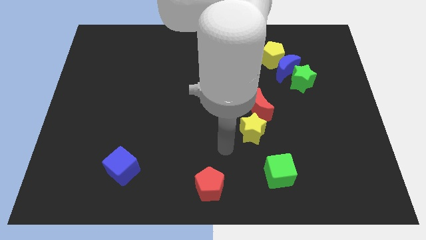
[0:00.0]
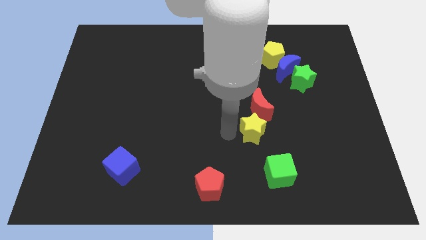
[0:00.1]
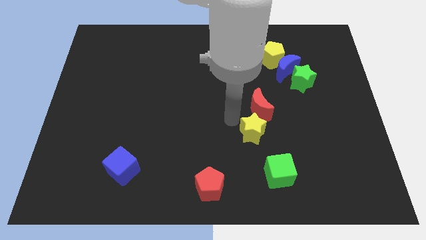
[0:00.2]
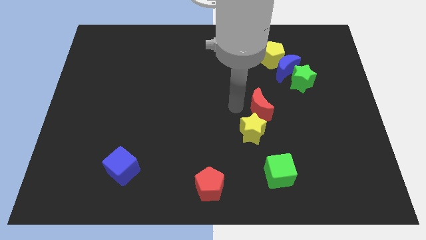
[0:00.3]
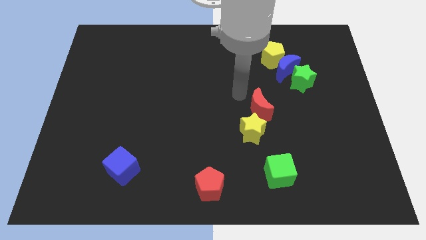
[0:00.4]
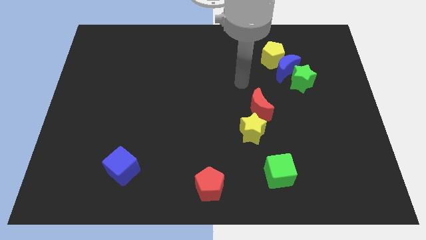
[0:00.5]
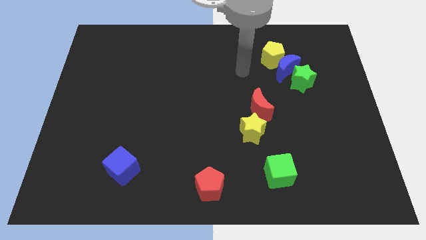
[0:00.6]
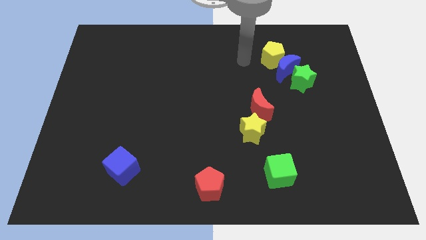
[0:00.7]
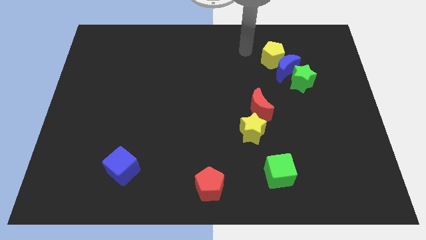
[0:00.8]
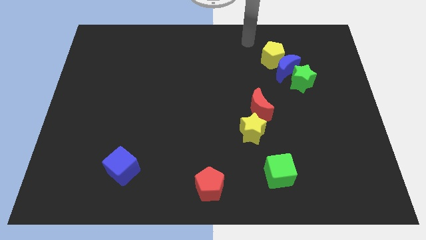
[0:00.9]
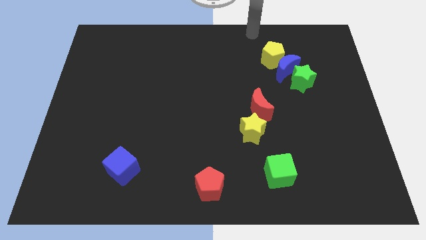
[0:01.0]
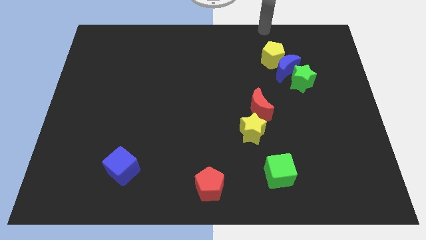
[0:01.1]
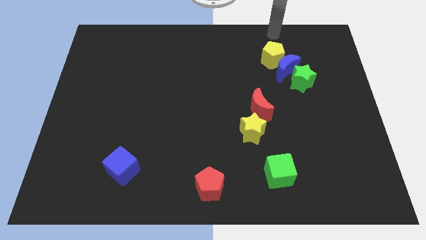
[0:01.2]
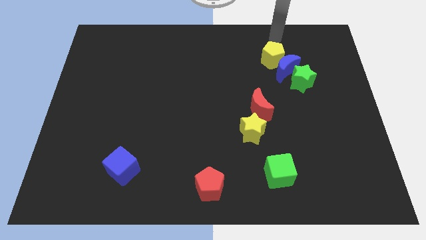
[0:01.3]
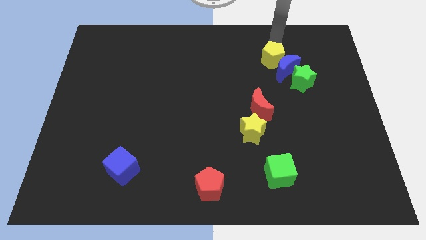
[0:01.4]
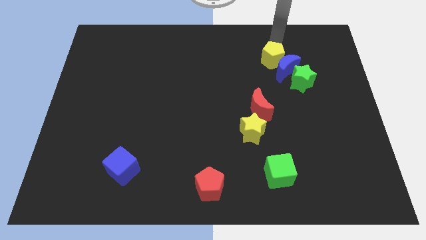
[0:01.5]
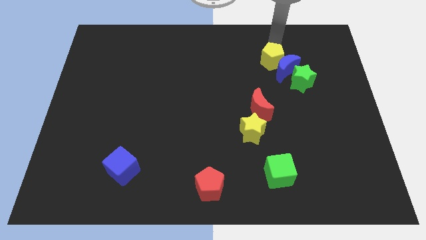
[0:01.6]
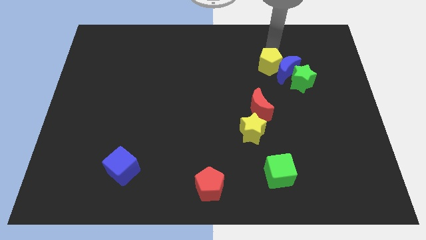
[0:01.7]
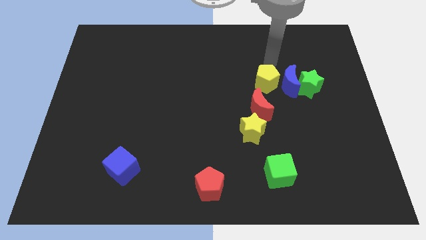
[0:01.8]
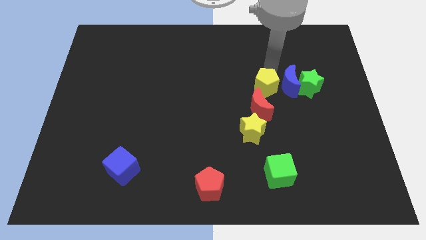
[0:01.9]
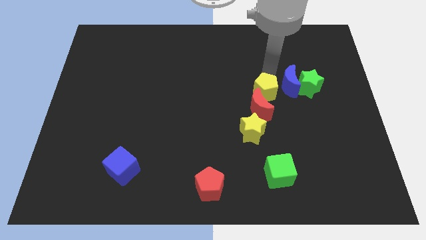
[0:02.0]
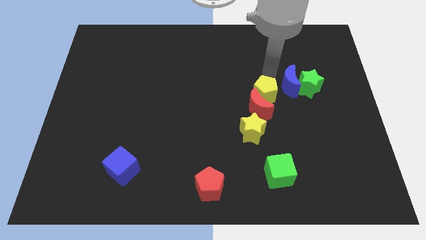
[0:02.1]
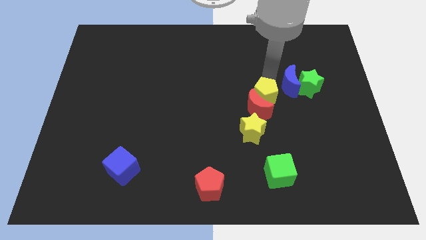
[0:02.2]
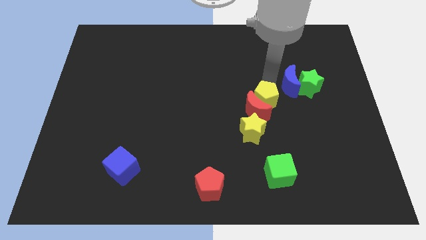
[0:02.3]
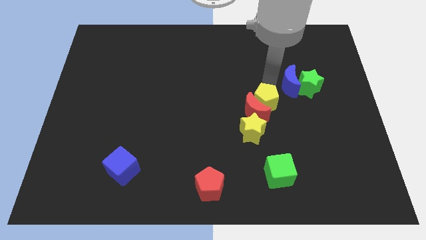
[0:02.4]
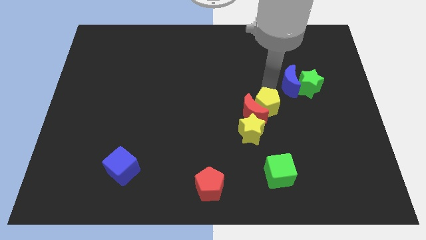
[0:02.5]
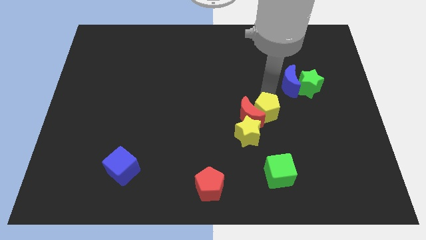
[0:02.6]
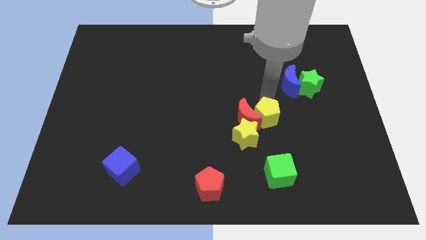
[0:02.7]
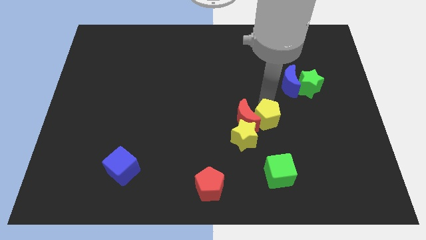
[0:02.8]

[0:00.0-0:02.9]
place yellow pentagon to the top of red moon

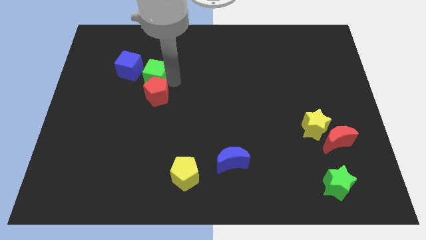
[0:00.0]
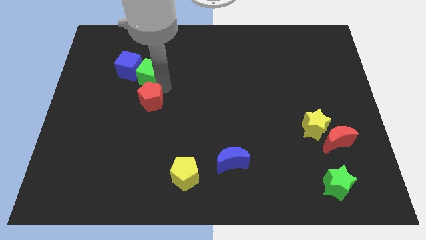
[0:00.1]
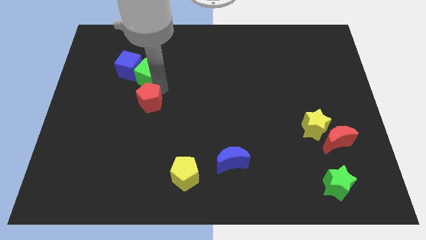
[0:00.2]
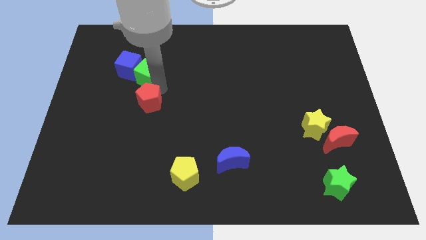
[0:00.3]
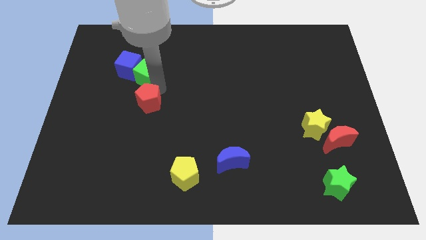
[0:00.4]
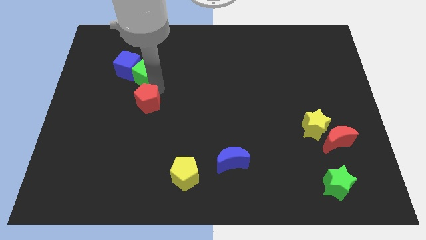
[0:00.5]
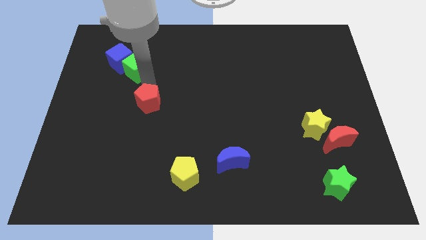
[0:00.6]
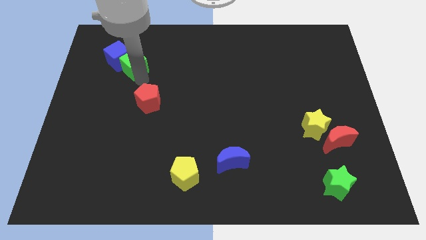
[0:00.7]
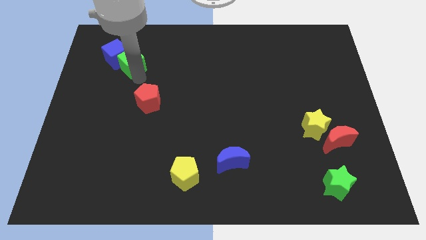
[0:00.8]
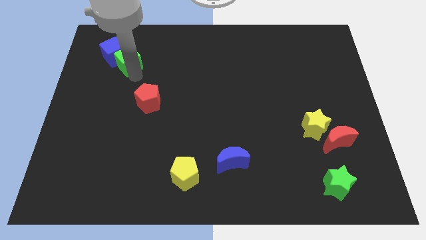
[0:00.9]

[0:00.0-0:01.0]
move the green cube into the blue cube

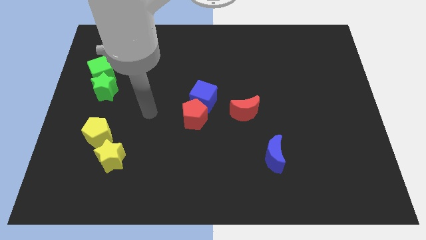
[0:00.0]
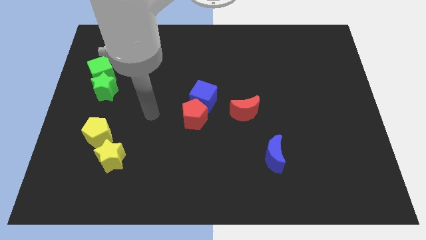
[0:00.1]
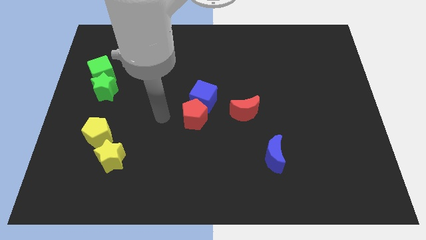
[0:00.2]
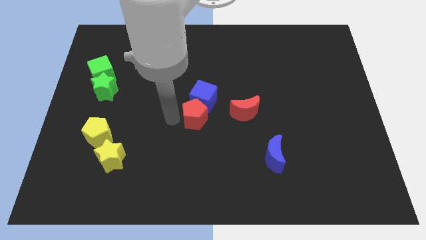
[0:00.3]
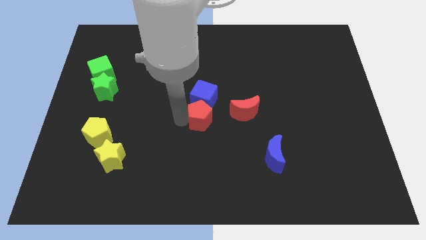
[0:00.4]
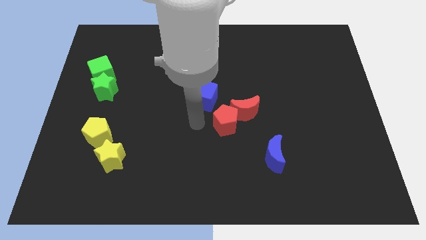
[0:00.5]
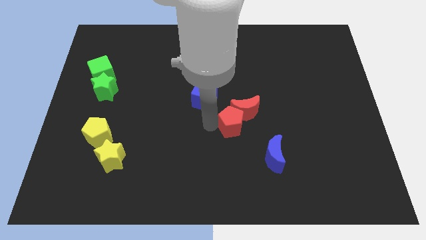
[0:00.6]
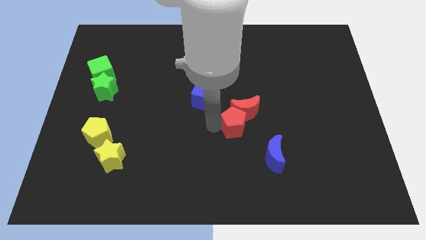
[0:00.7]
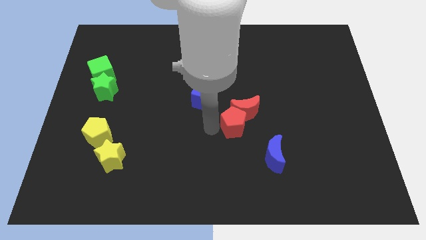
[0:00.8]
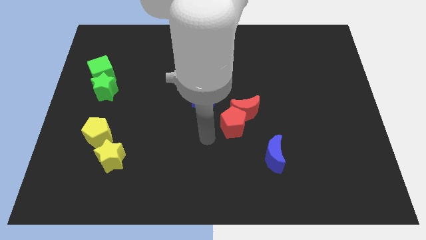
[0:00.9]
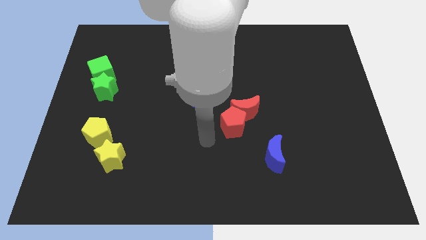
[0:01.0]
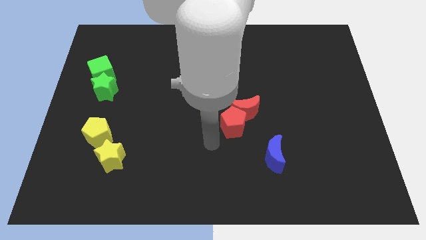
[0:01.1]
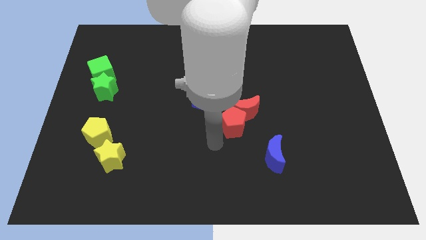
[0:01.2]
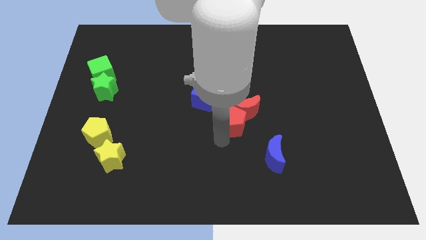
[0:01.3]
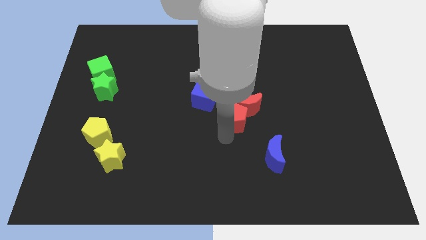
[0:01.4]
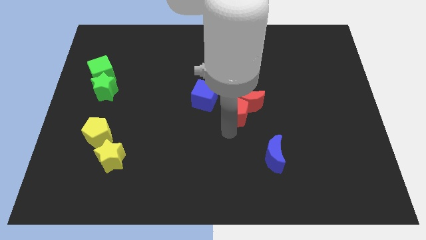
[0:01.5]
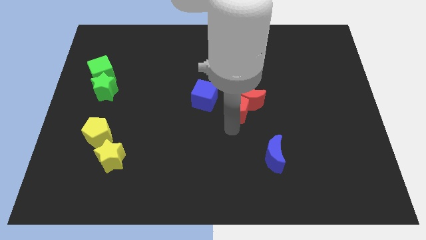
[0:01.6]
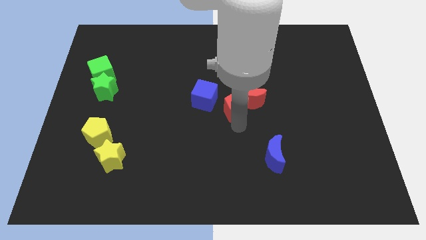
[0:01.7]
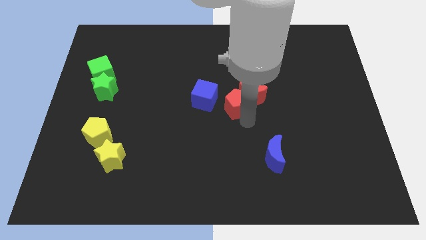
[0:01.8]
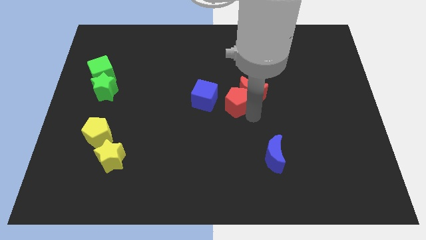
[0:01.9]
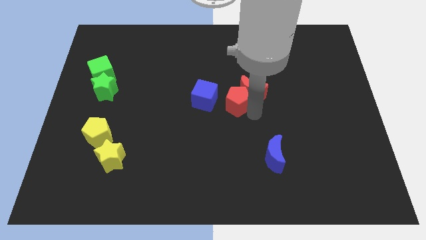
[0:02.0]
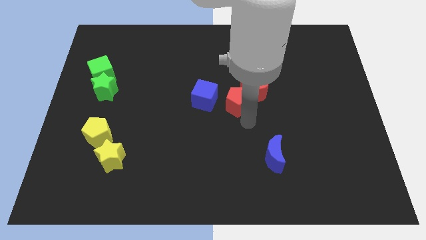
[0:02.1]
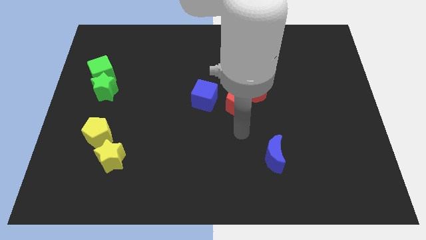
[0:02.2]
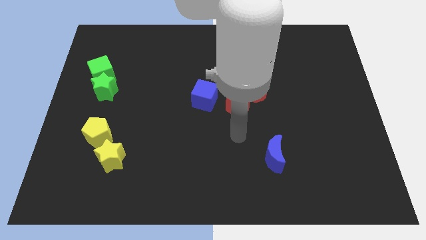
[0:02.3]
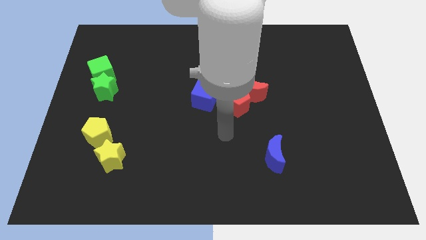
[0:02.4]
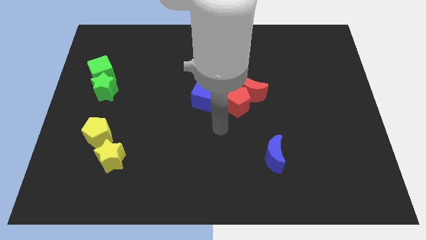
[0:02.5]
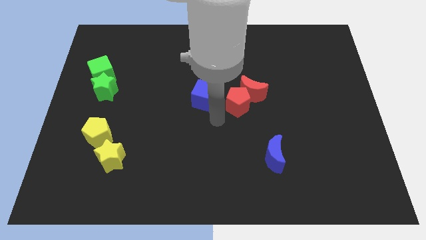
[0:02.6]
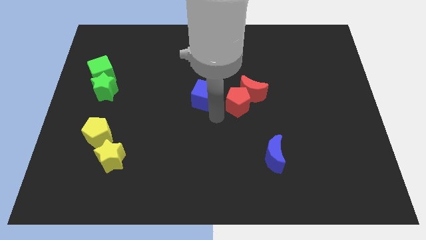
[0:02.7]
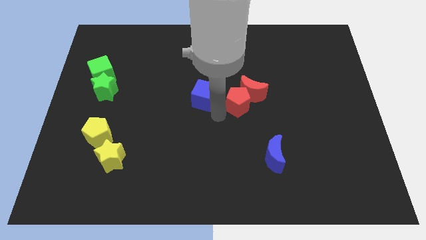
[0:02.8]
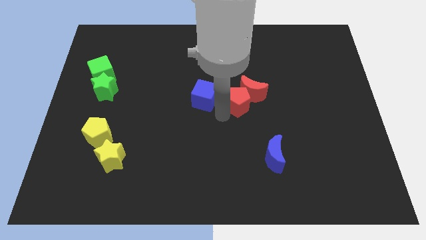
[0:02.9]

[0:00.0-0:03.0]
move the red pentagon and the red moon up slightly

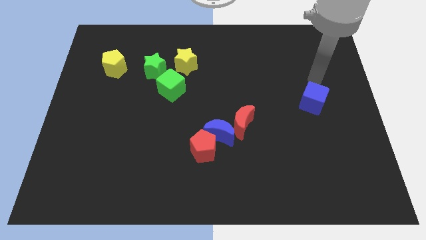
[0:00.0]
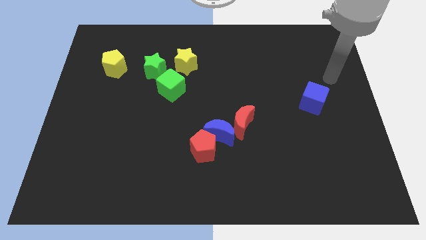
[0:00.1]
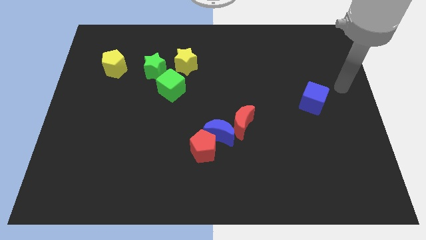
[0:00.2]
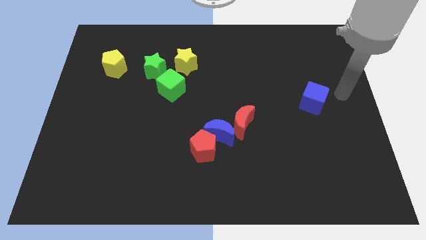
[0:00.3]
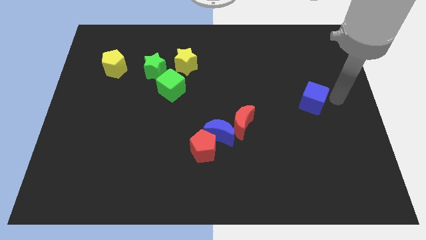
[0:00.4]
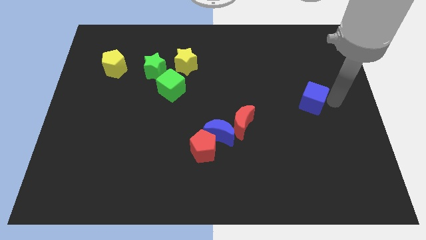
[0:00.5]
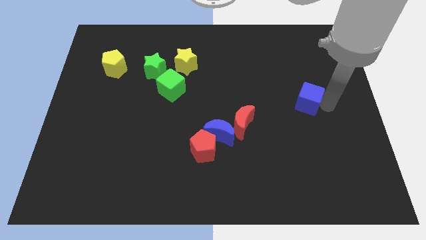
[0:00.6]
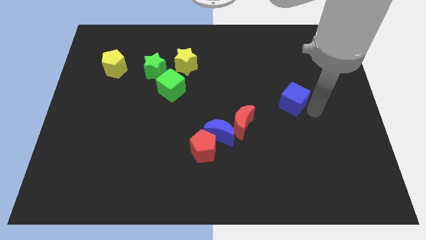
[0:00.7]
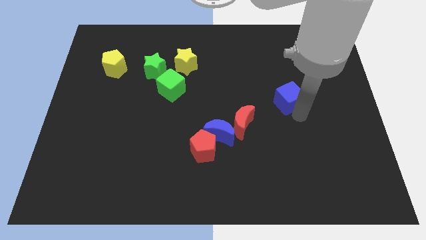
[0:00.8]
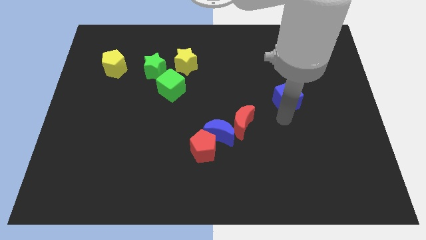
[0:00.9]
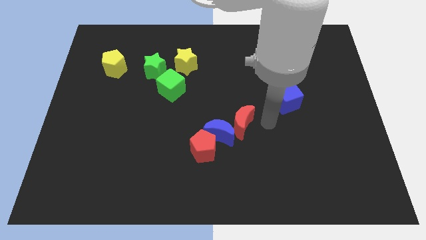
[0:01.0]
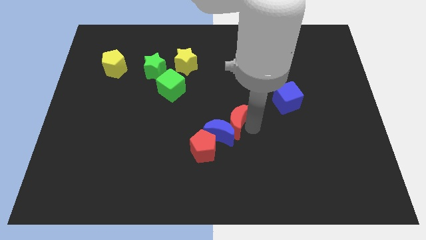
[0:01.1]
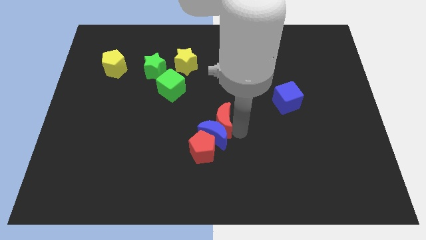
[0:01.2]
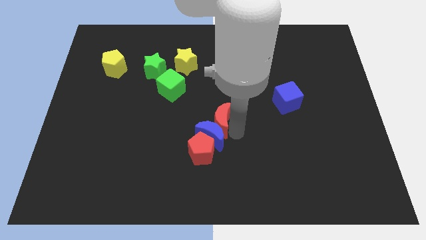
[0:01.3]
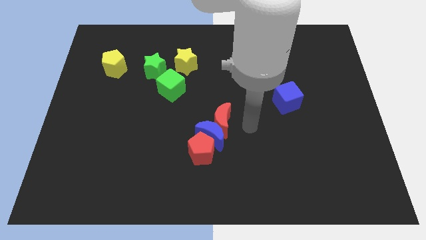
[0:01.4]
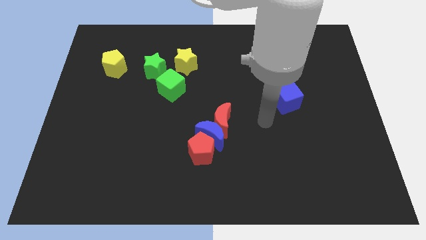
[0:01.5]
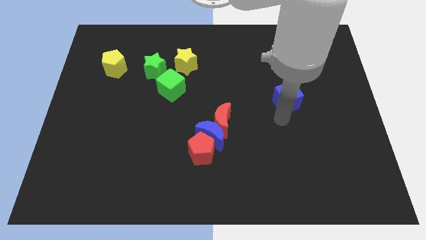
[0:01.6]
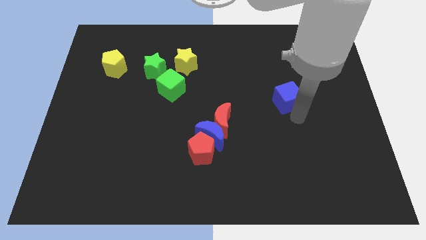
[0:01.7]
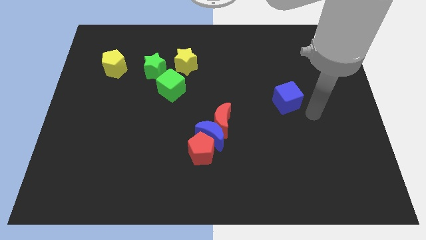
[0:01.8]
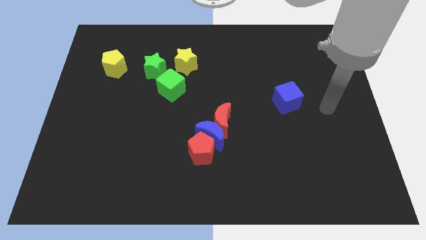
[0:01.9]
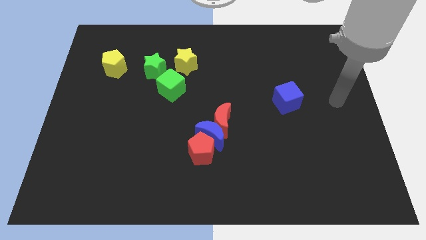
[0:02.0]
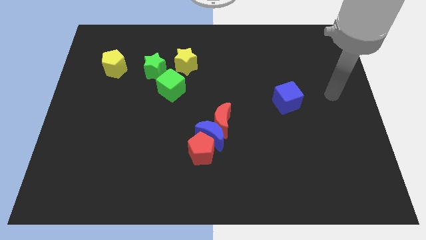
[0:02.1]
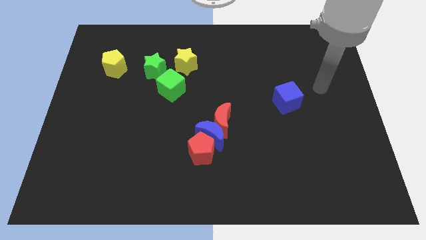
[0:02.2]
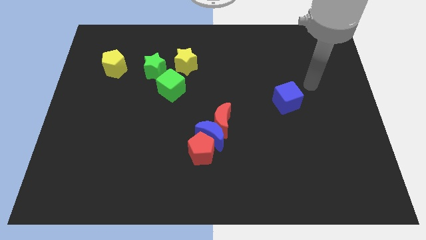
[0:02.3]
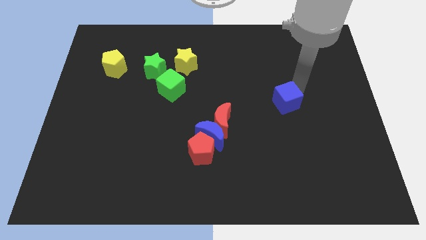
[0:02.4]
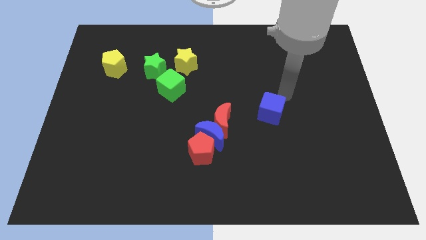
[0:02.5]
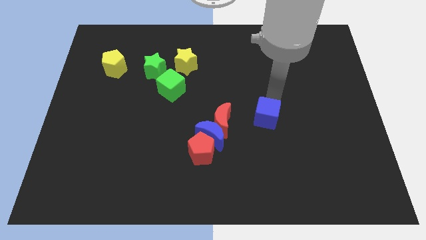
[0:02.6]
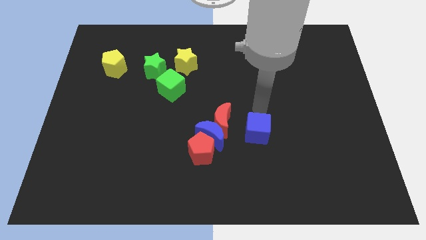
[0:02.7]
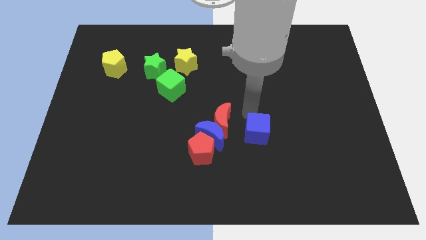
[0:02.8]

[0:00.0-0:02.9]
drag the blue cube towards the right of blue crescent
